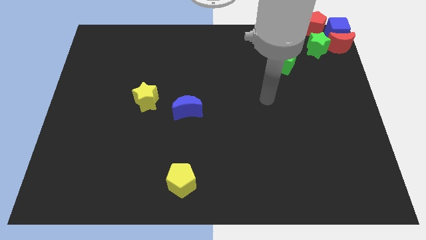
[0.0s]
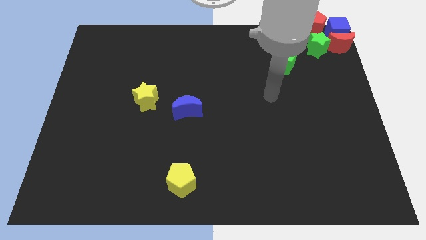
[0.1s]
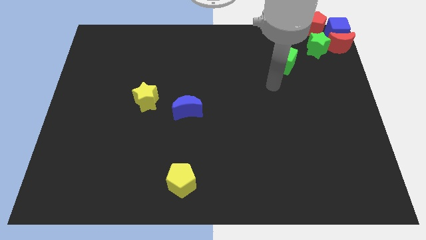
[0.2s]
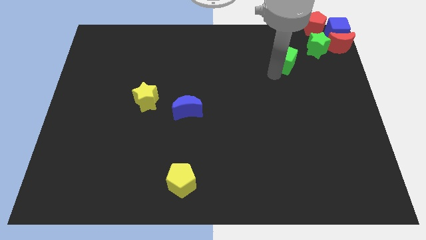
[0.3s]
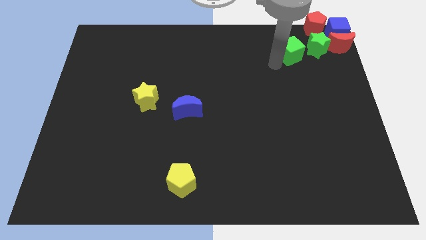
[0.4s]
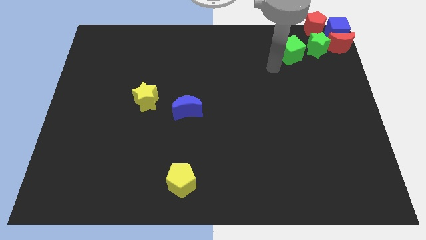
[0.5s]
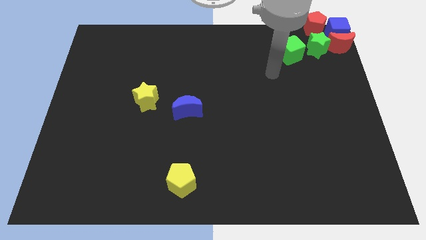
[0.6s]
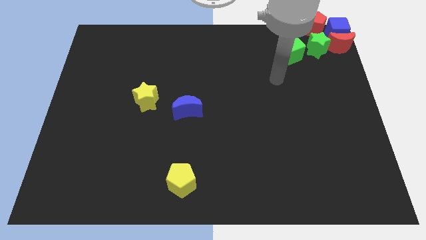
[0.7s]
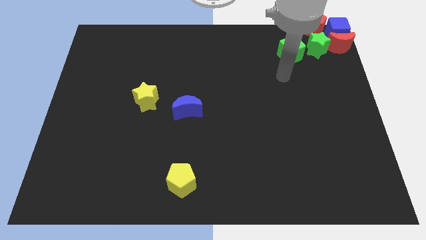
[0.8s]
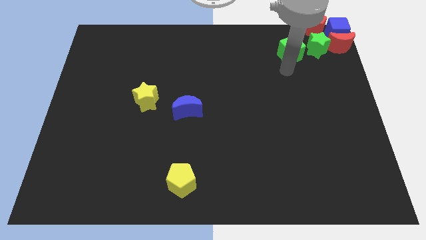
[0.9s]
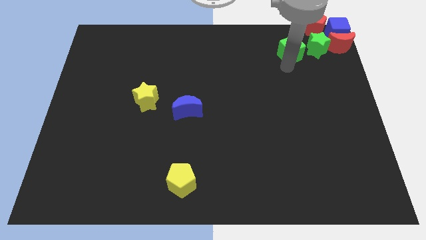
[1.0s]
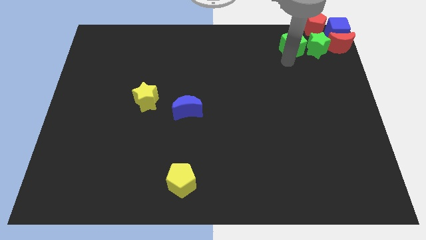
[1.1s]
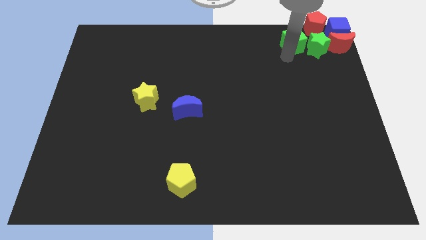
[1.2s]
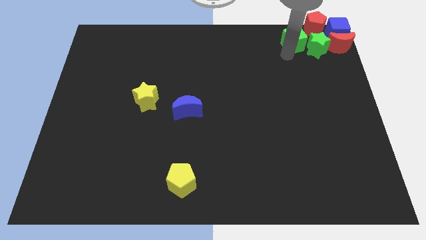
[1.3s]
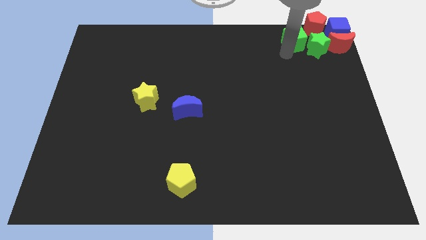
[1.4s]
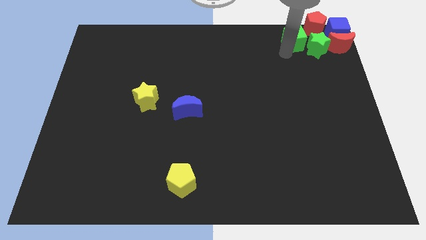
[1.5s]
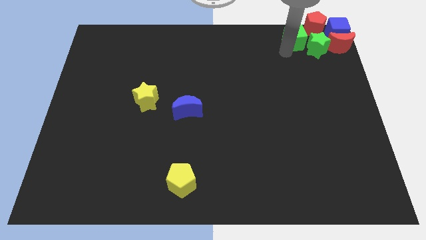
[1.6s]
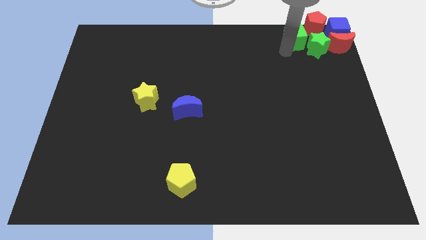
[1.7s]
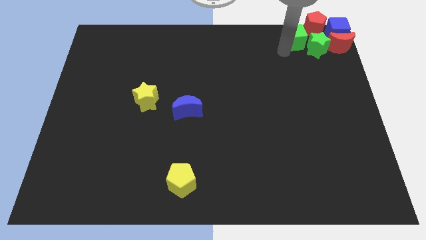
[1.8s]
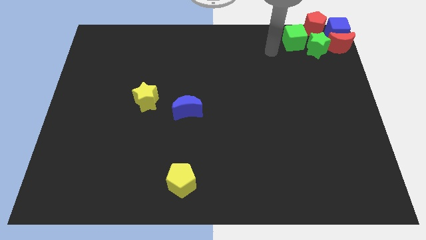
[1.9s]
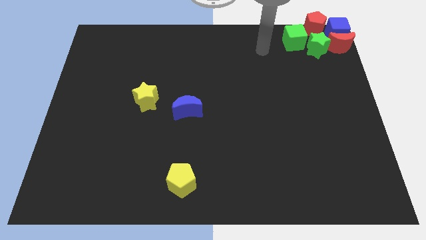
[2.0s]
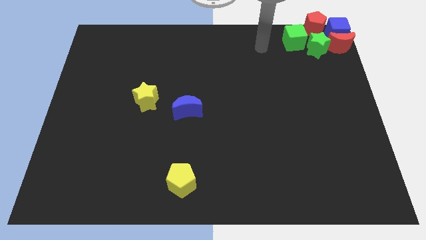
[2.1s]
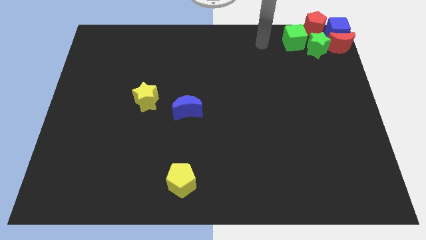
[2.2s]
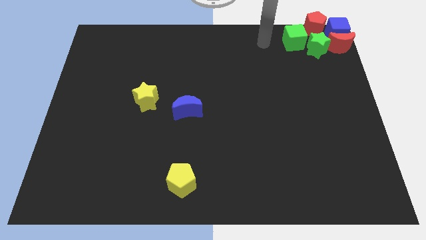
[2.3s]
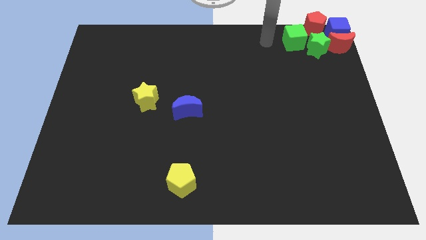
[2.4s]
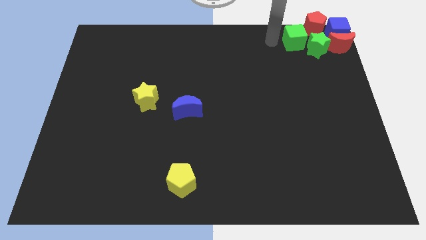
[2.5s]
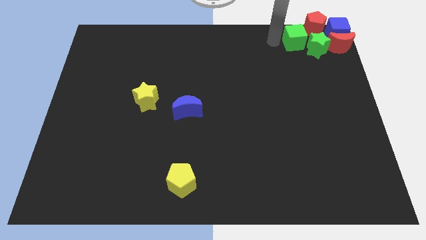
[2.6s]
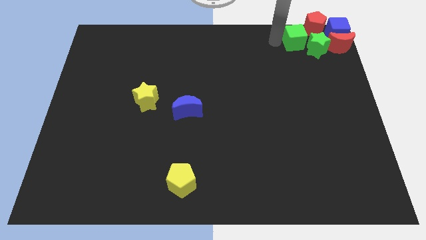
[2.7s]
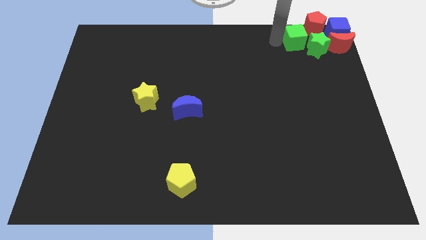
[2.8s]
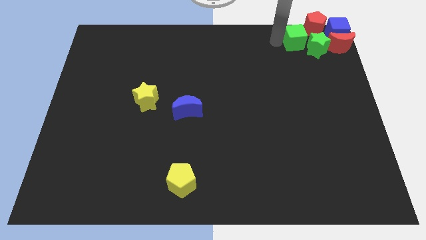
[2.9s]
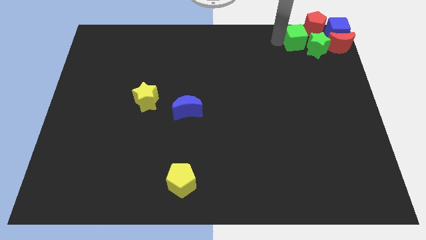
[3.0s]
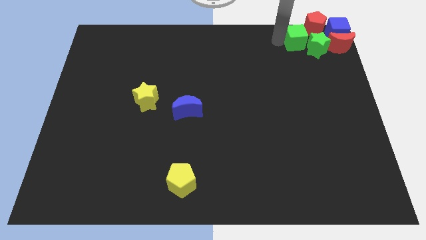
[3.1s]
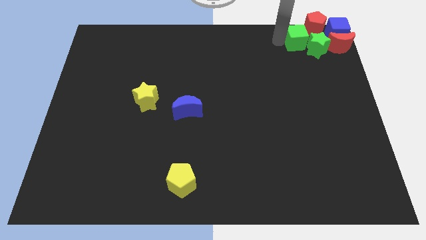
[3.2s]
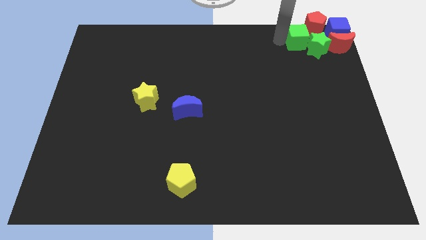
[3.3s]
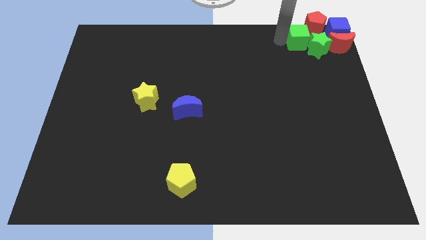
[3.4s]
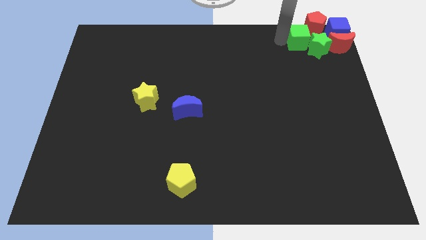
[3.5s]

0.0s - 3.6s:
place the green block to the left of pentagon and star

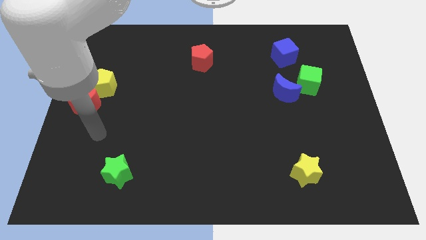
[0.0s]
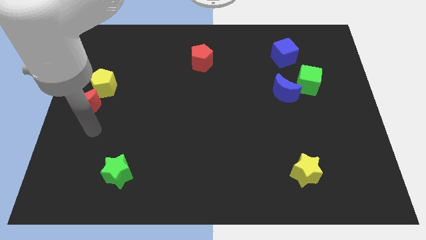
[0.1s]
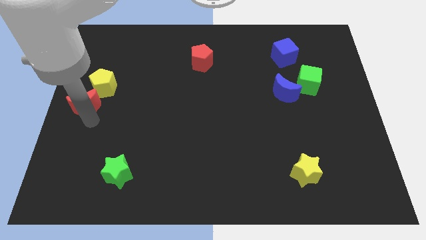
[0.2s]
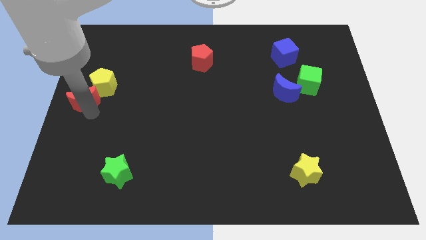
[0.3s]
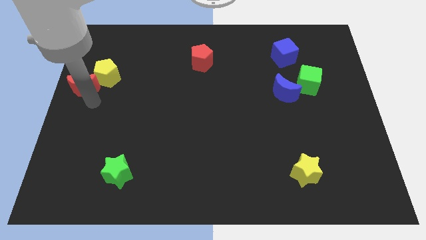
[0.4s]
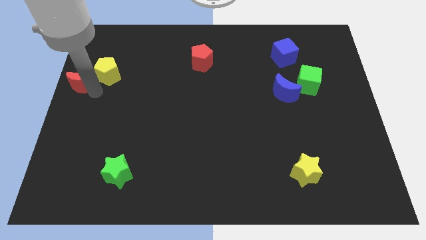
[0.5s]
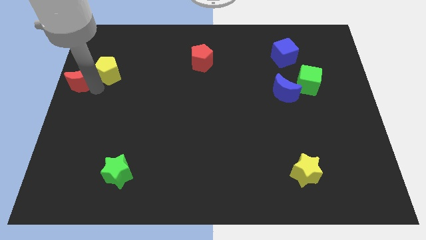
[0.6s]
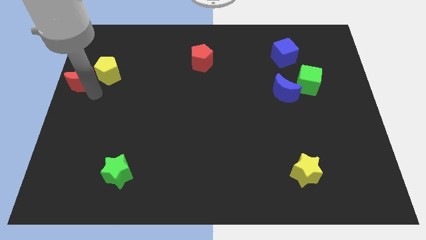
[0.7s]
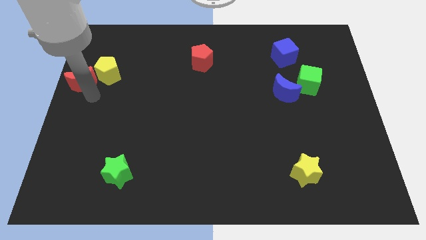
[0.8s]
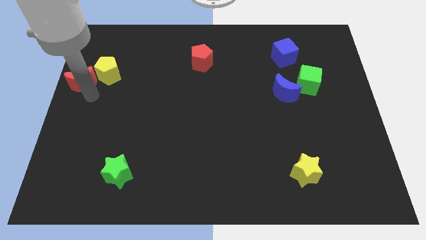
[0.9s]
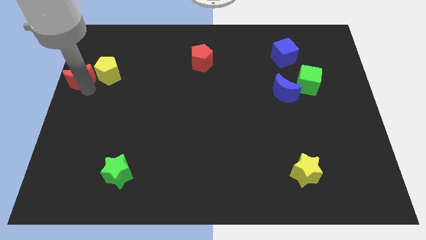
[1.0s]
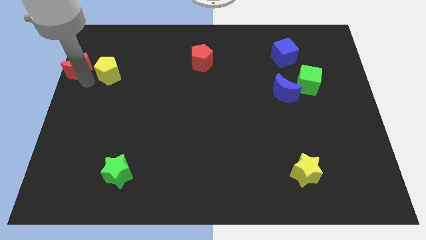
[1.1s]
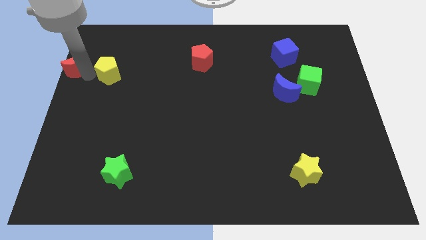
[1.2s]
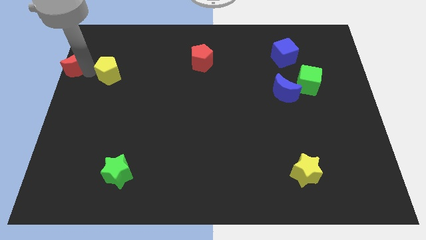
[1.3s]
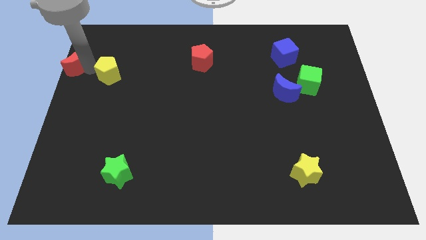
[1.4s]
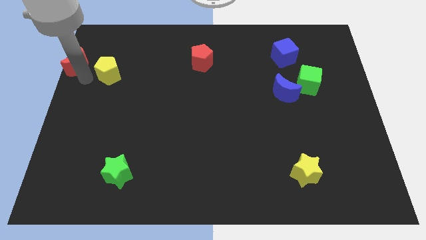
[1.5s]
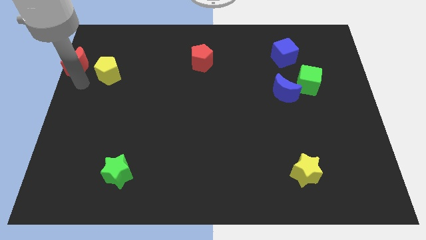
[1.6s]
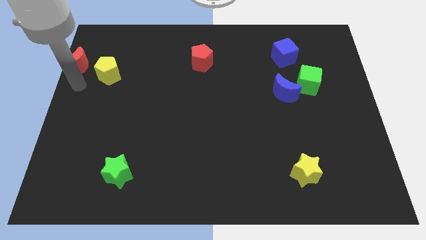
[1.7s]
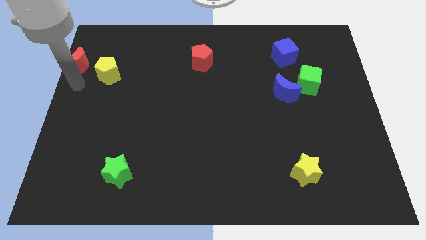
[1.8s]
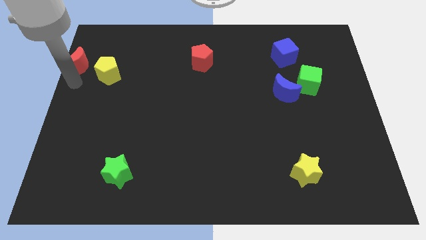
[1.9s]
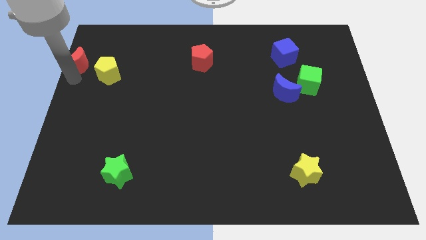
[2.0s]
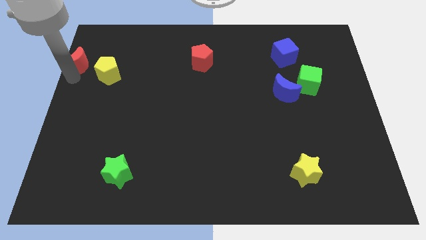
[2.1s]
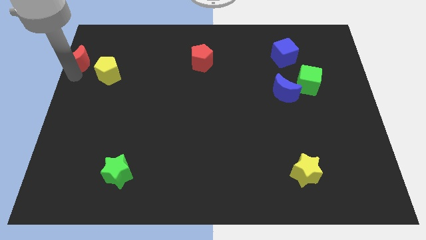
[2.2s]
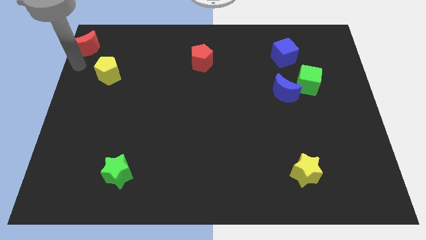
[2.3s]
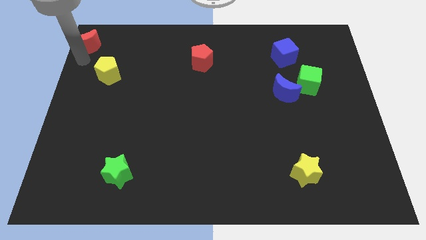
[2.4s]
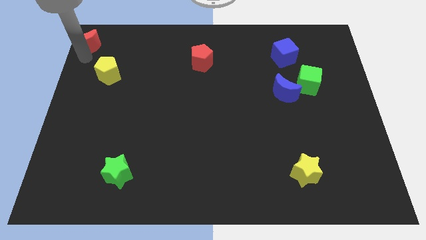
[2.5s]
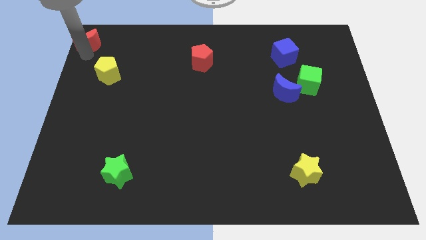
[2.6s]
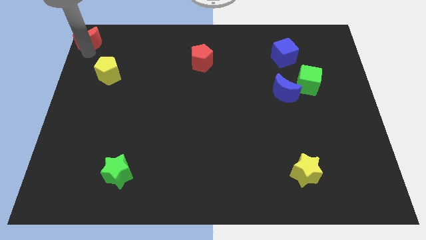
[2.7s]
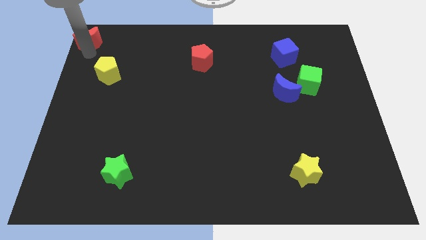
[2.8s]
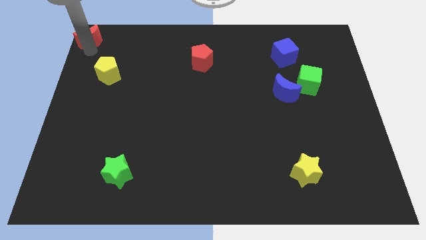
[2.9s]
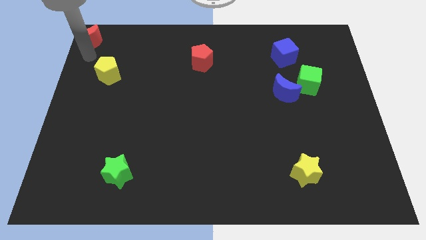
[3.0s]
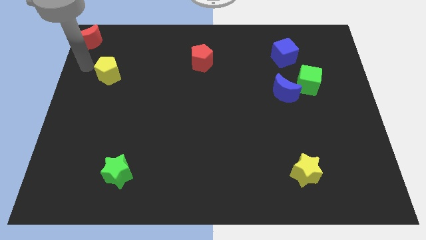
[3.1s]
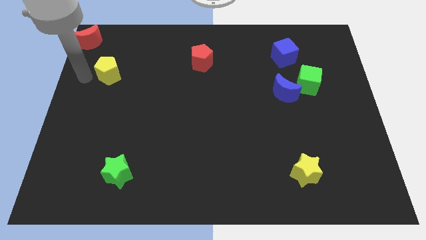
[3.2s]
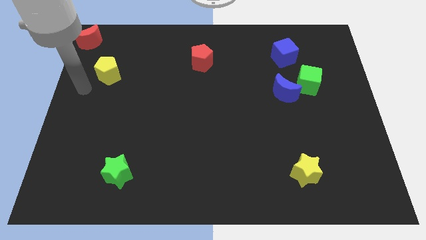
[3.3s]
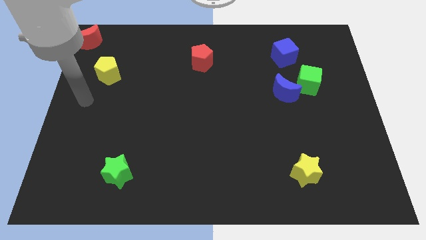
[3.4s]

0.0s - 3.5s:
slide the red moon to the top left corner of the board

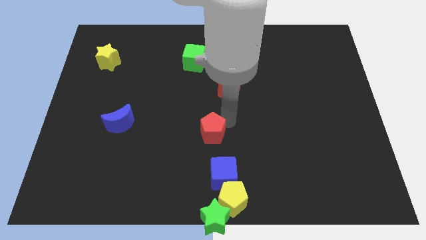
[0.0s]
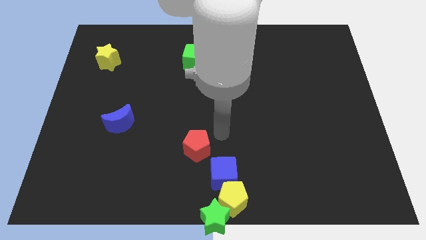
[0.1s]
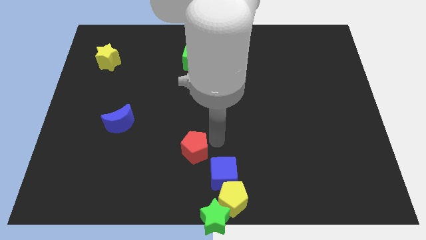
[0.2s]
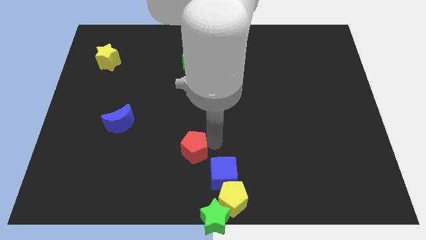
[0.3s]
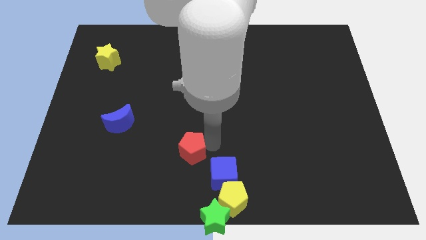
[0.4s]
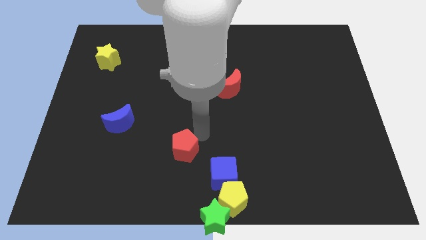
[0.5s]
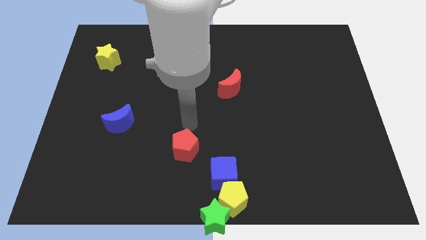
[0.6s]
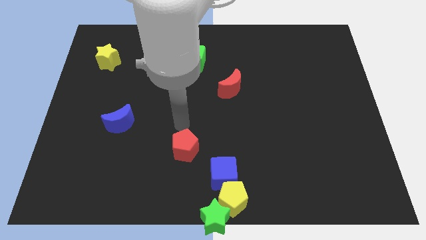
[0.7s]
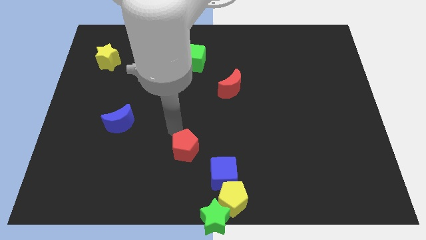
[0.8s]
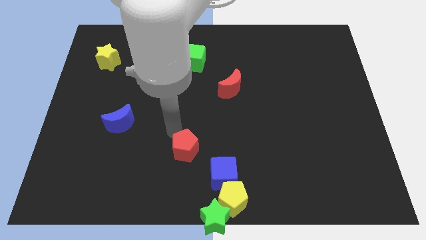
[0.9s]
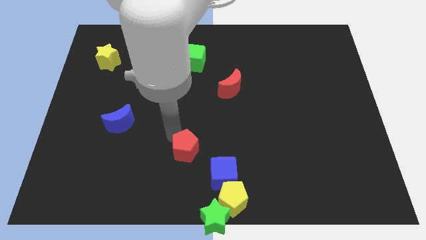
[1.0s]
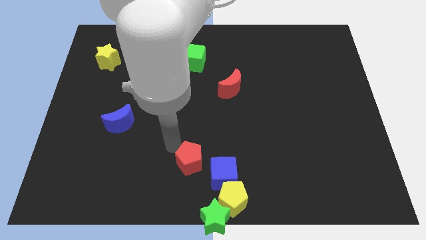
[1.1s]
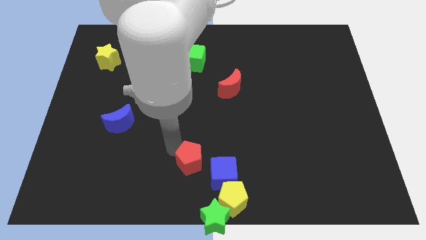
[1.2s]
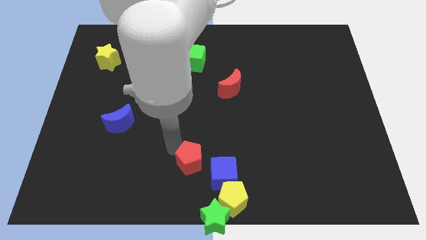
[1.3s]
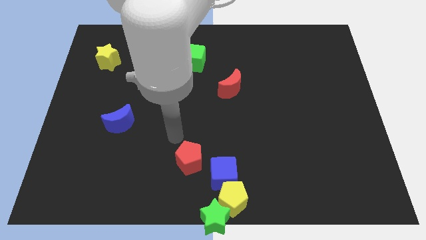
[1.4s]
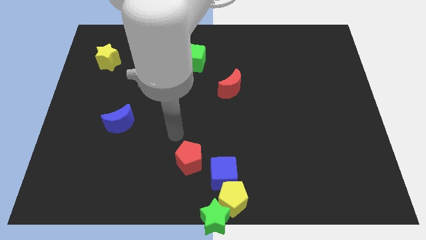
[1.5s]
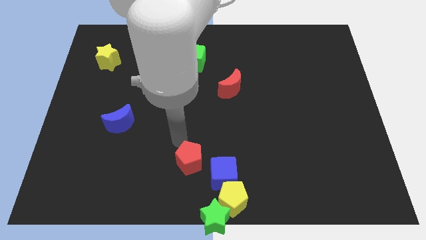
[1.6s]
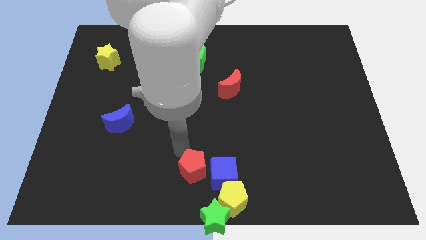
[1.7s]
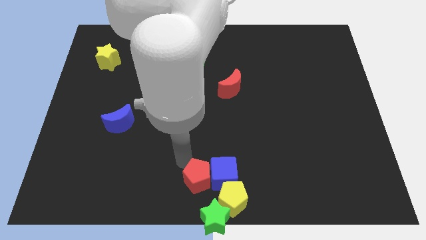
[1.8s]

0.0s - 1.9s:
place the red pentagon to the left of blue cube

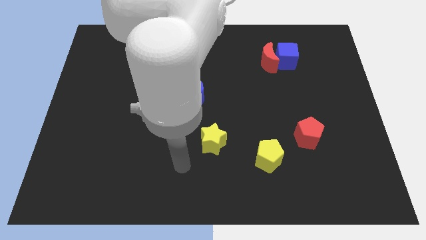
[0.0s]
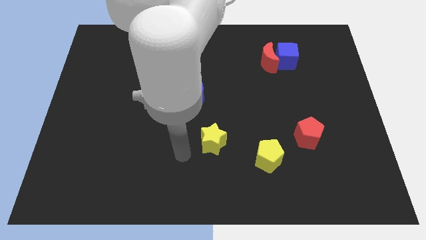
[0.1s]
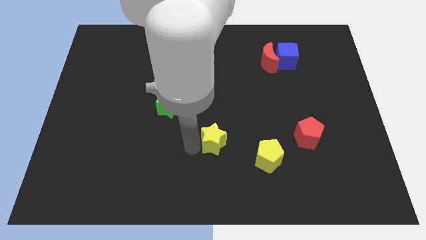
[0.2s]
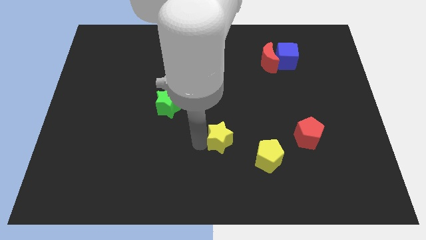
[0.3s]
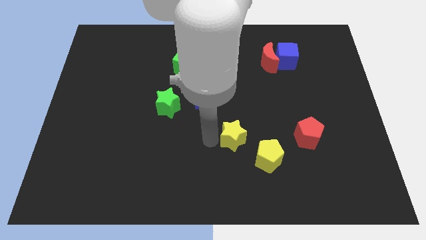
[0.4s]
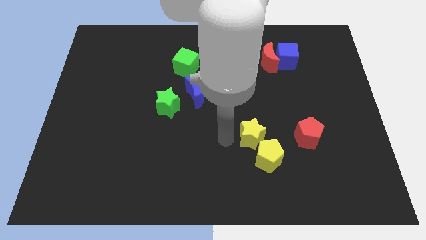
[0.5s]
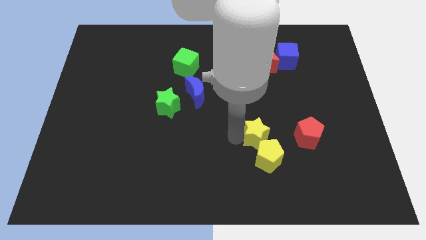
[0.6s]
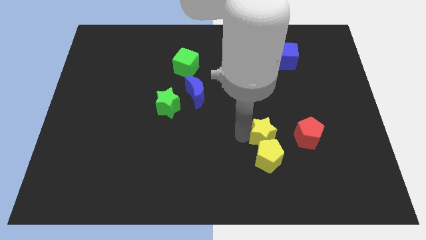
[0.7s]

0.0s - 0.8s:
place the yellow star at the top left side of yellow pentagon
